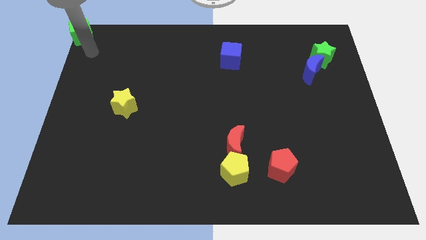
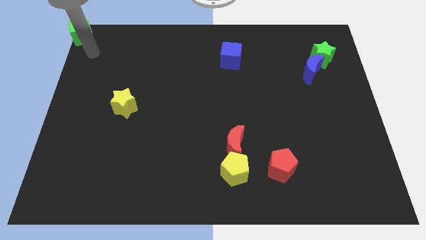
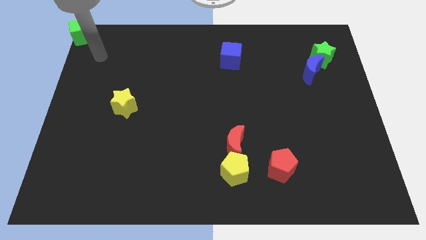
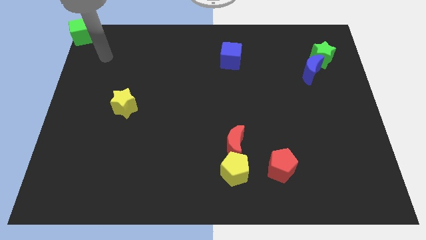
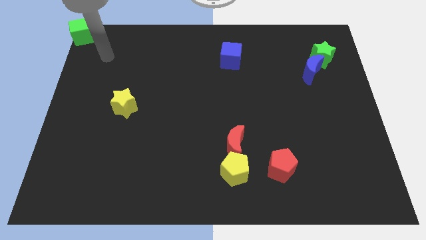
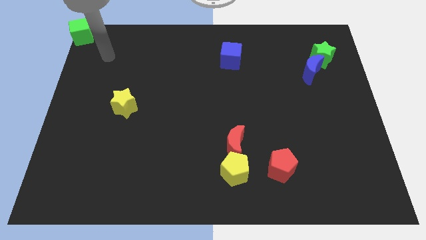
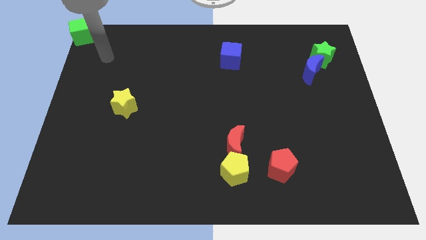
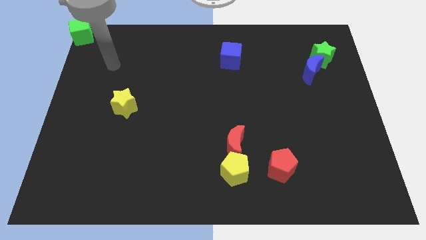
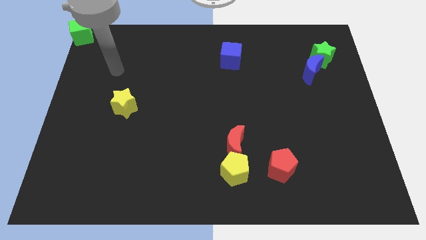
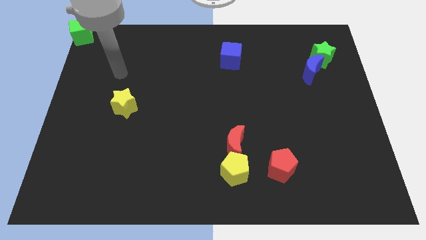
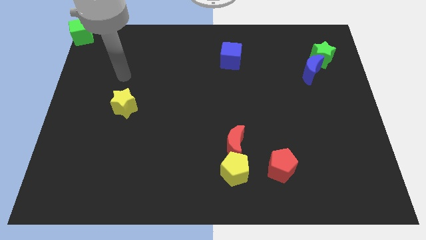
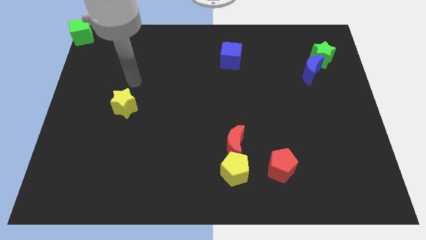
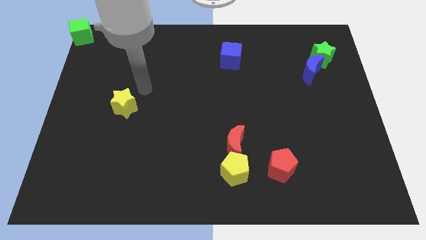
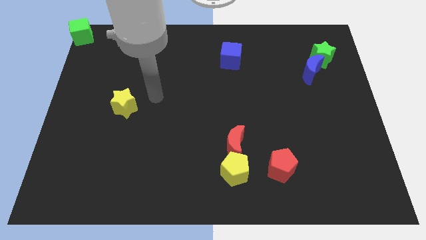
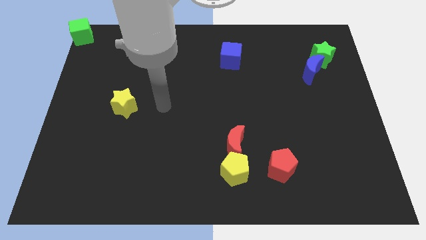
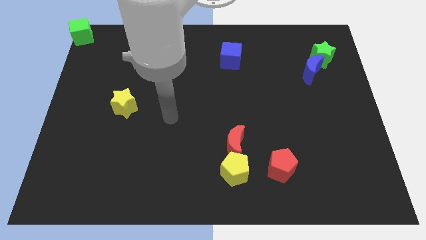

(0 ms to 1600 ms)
move the arm away from the green cube

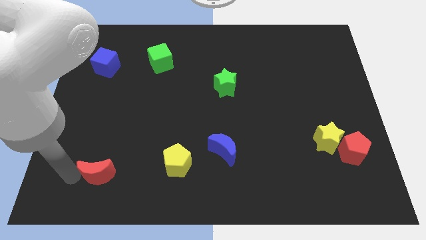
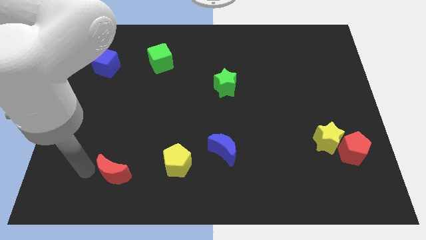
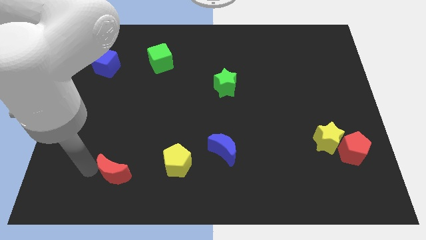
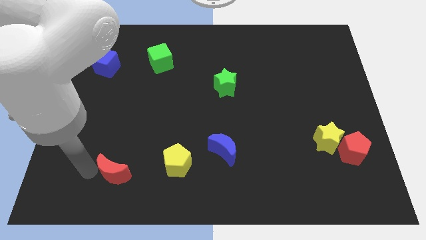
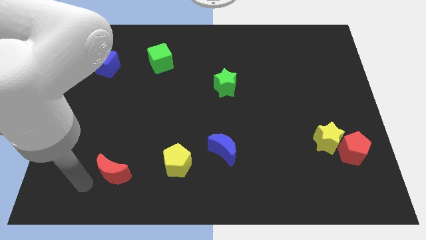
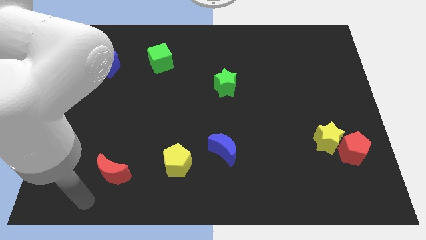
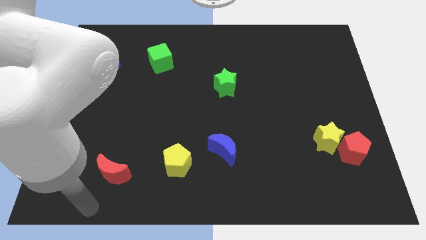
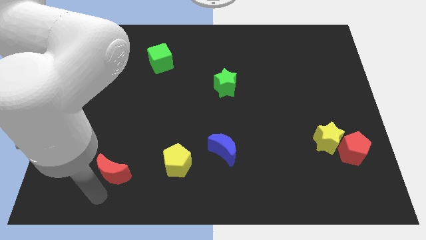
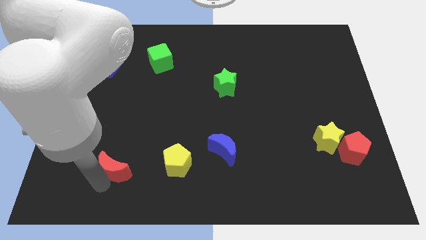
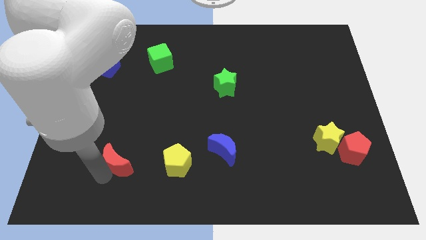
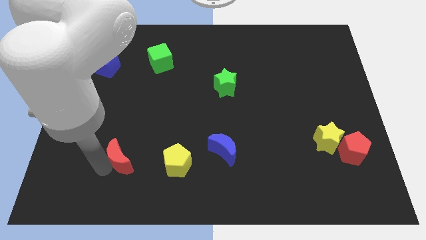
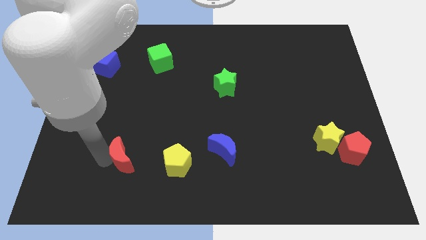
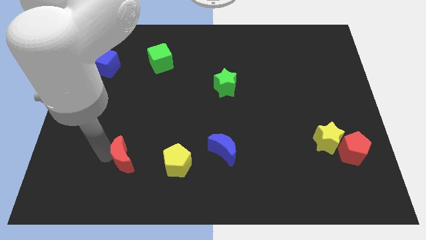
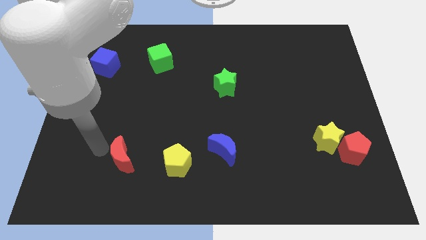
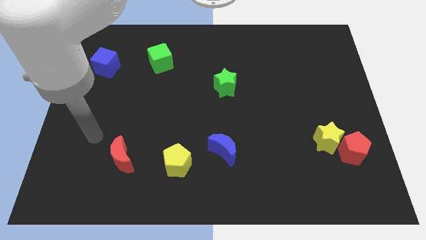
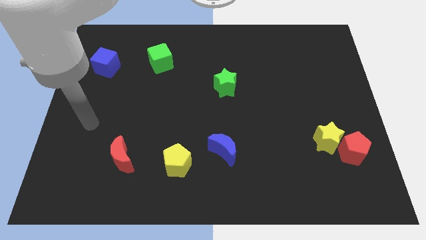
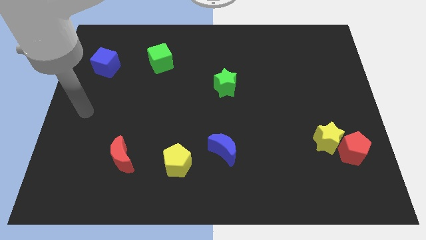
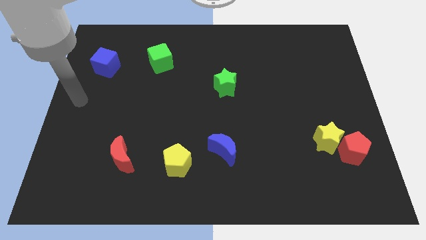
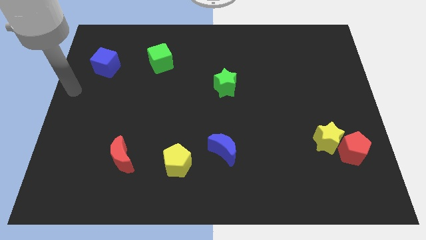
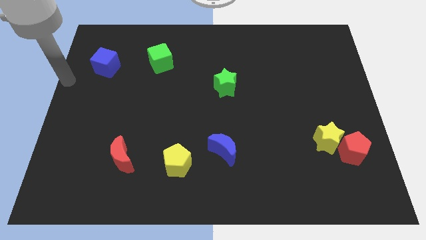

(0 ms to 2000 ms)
push the red crescent horizontally to the yellow pentagon

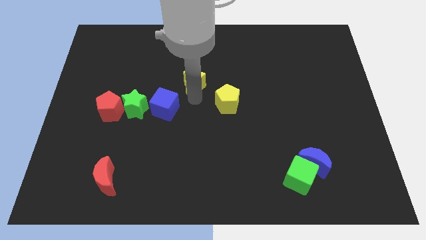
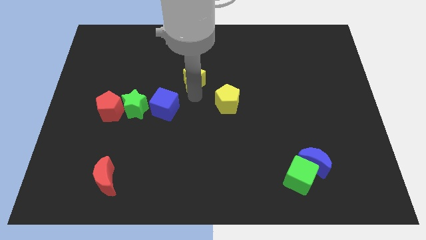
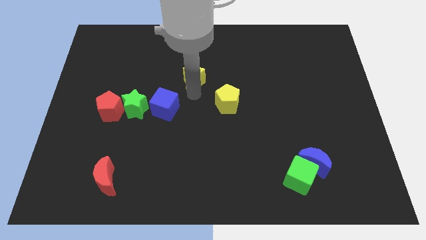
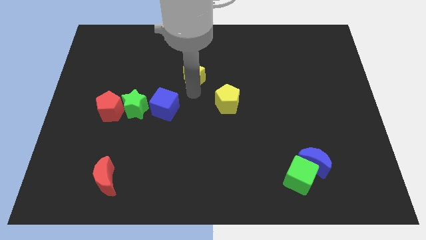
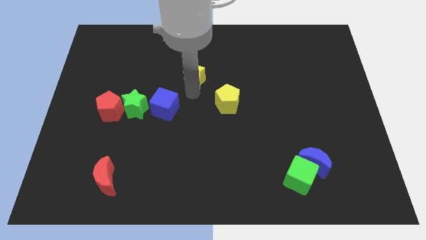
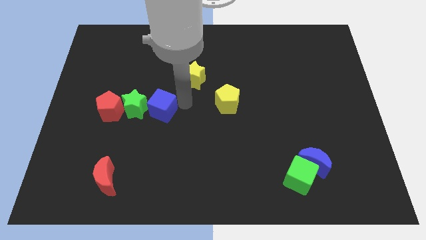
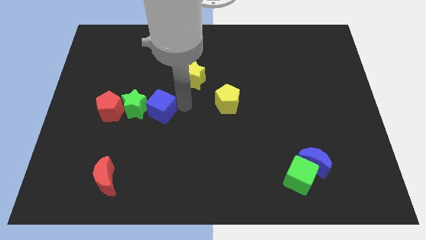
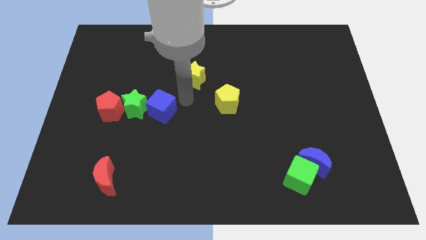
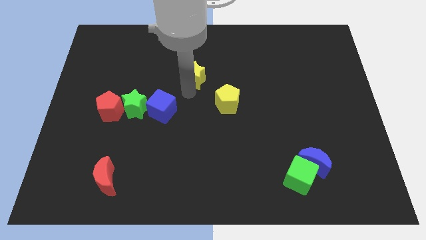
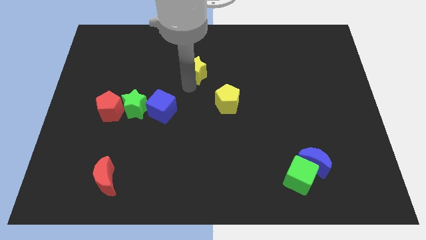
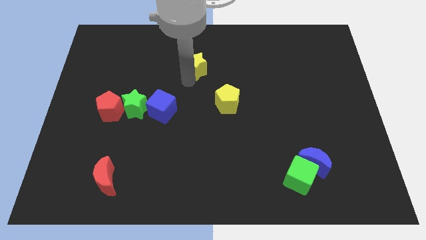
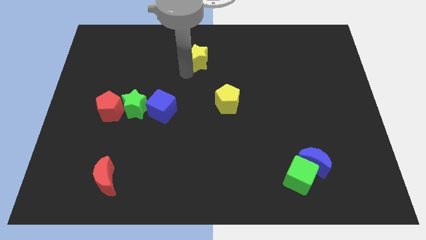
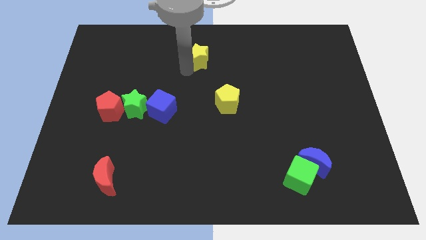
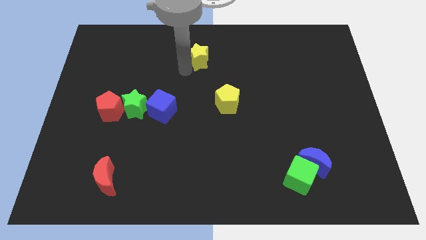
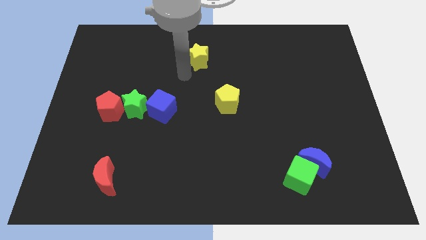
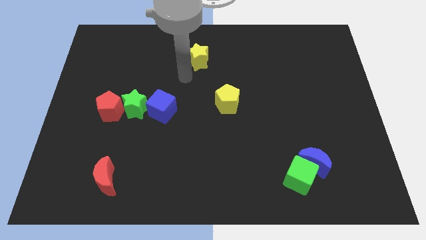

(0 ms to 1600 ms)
move the yellow star towards the top of the board

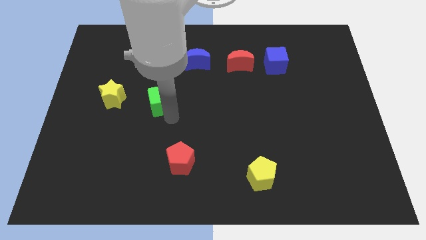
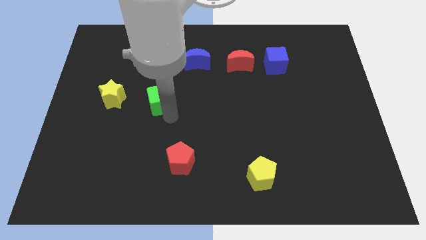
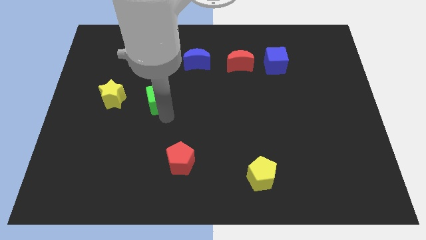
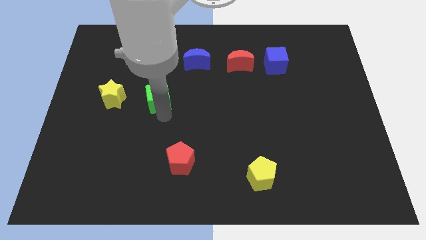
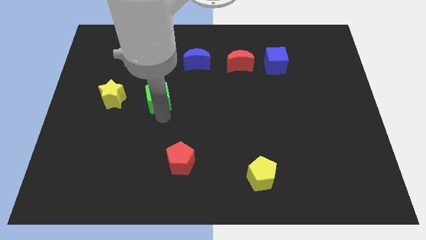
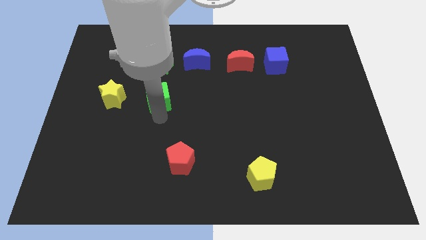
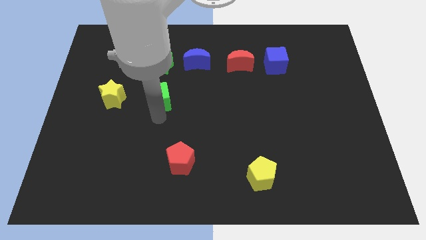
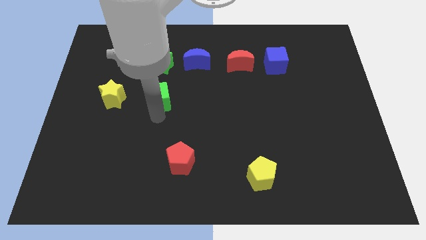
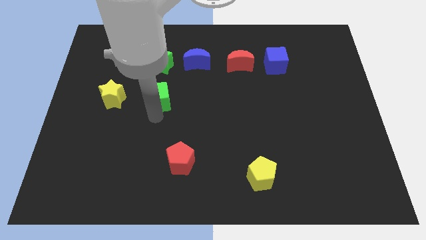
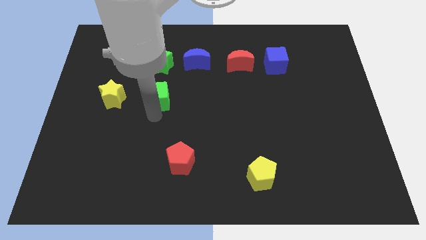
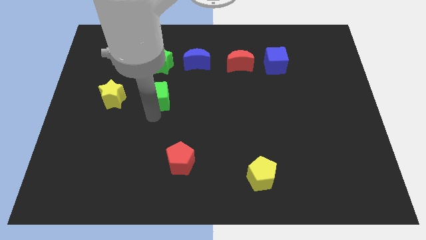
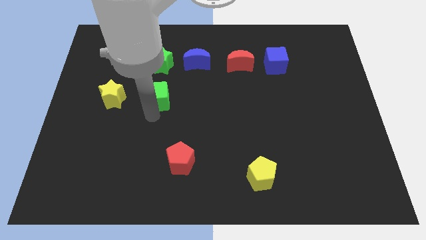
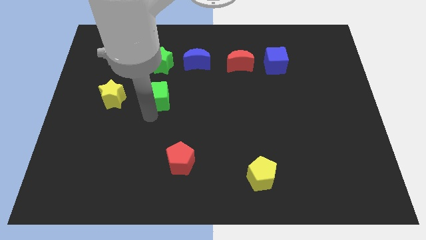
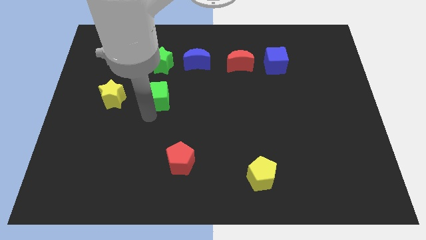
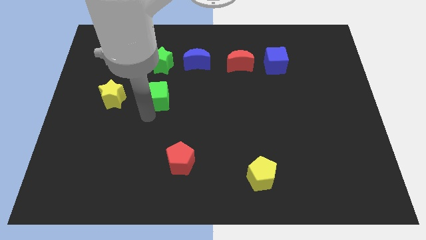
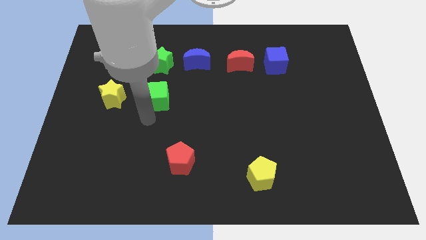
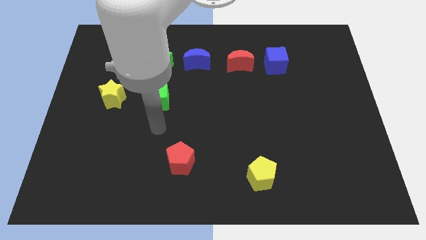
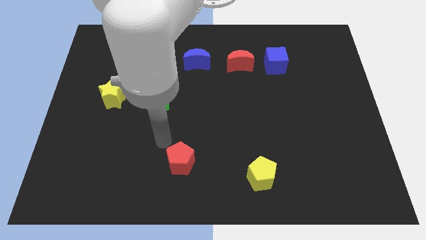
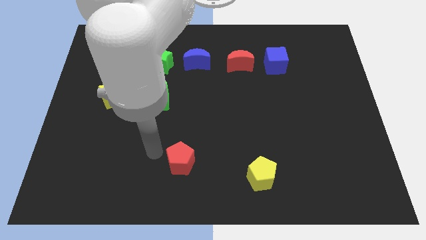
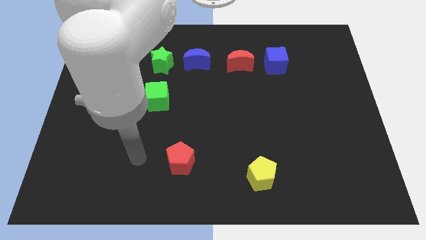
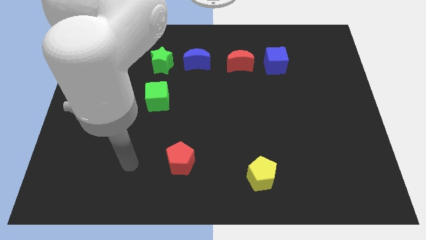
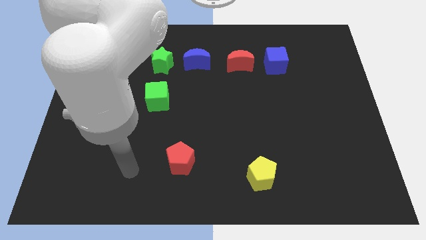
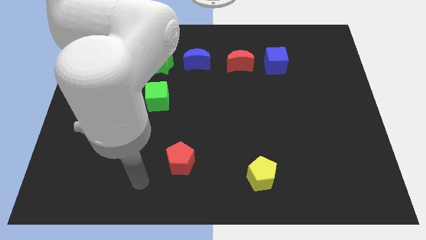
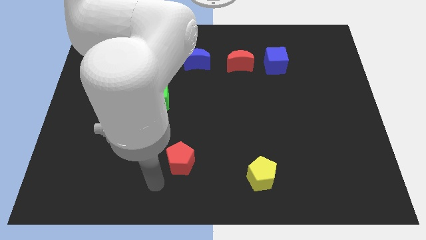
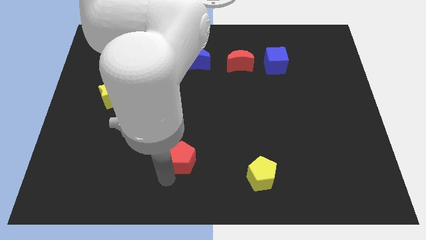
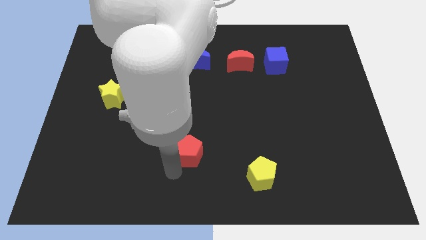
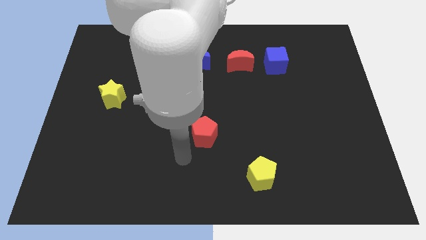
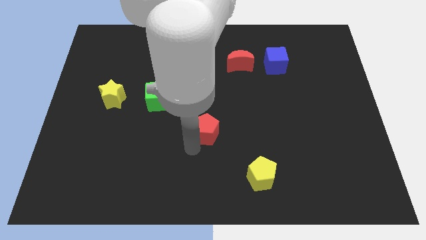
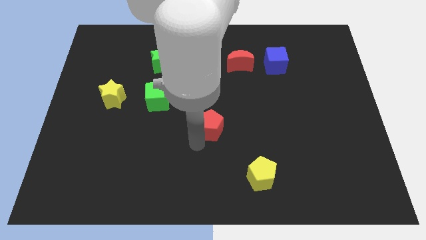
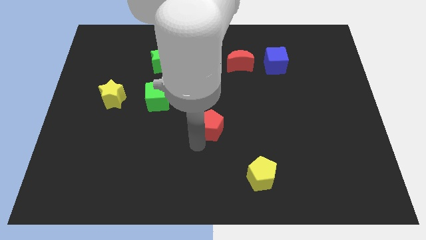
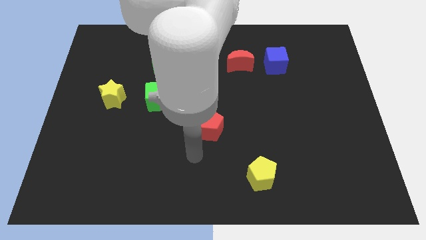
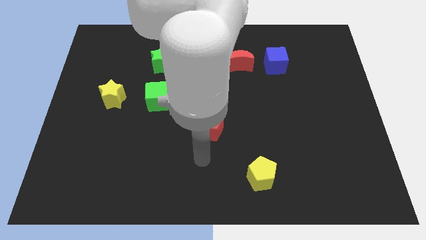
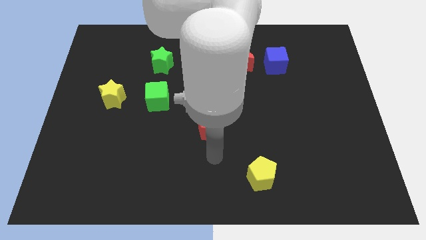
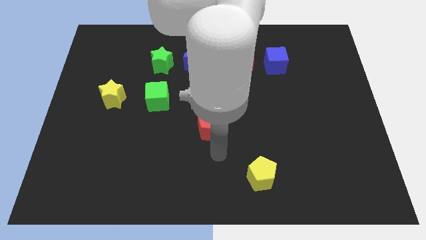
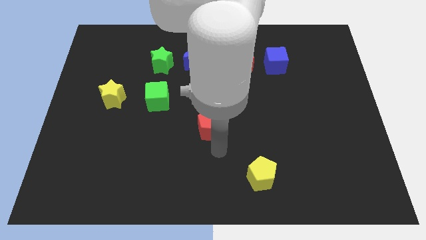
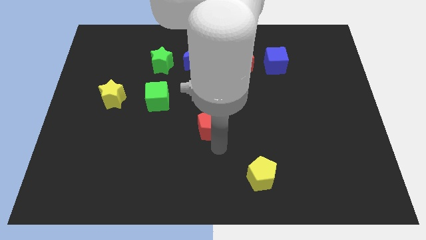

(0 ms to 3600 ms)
place the red pentagon towards the center of the board

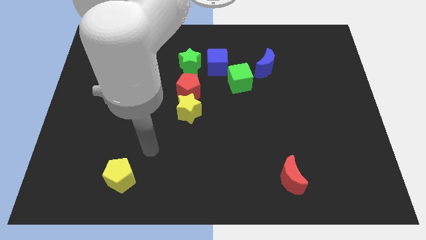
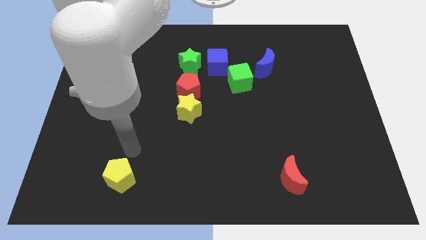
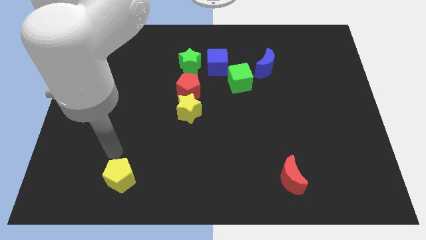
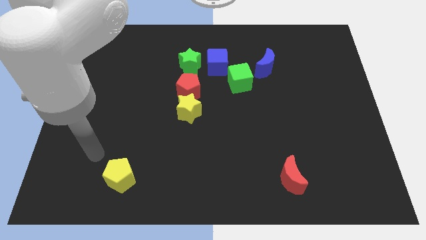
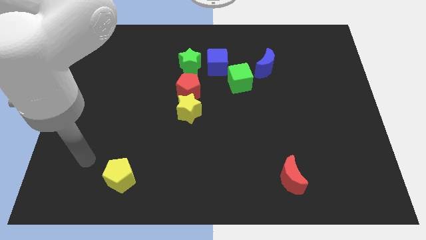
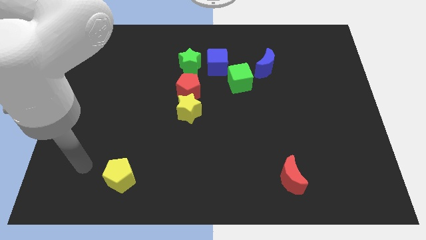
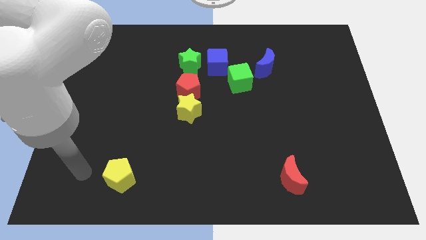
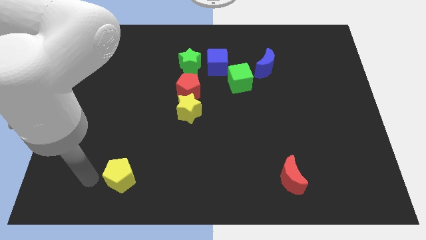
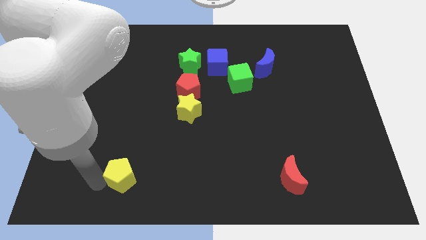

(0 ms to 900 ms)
put hand on the left side of yellow pentagon
